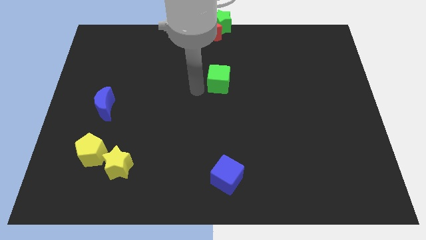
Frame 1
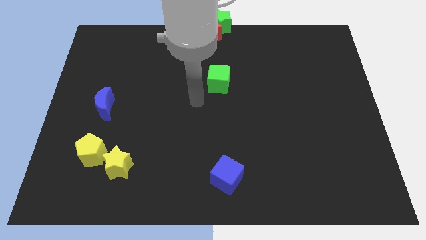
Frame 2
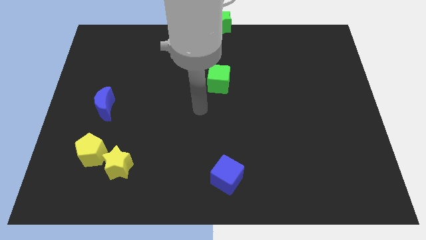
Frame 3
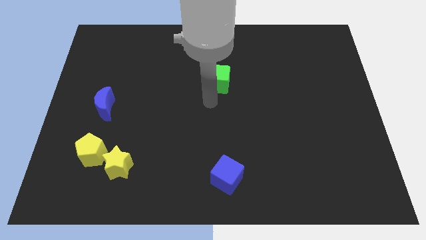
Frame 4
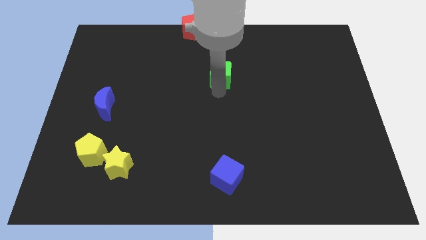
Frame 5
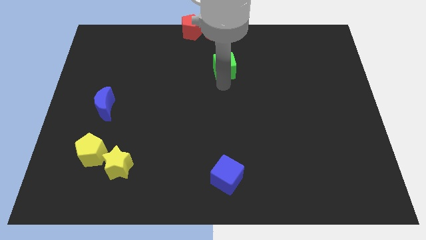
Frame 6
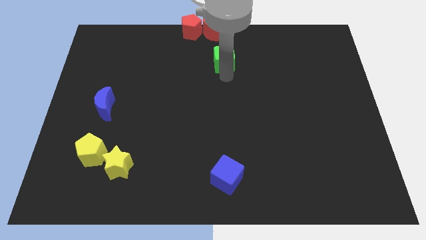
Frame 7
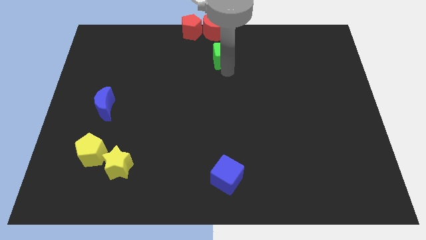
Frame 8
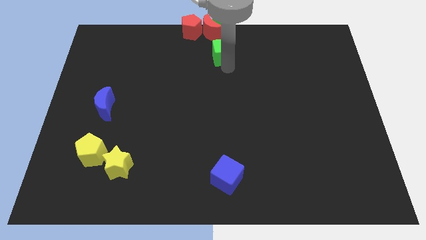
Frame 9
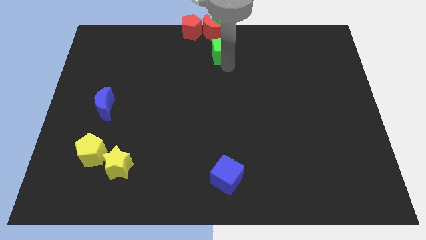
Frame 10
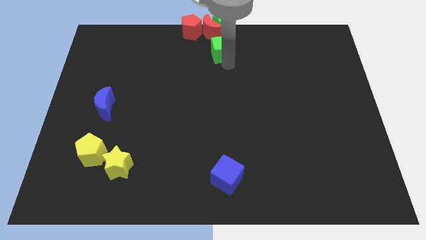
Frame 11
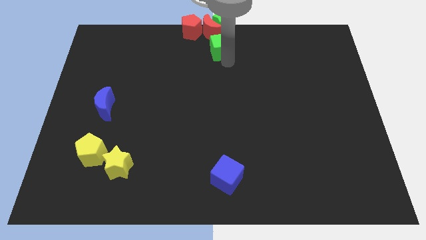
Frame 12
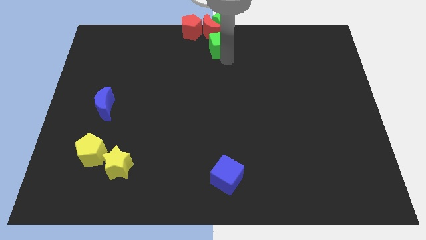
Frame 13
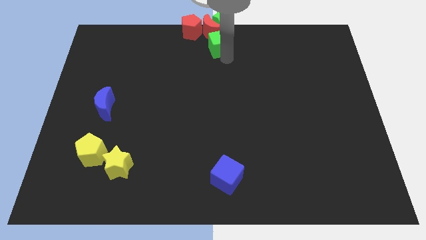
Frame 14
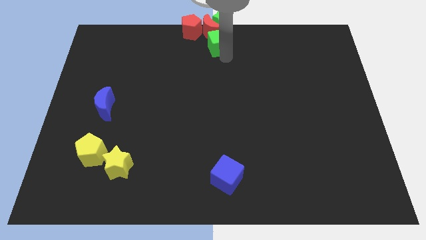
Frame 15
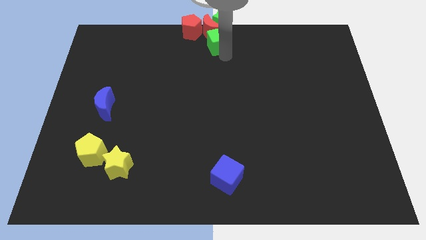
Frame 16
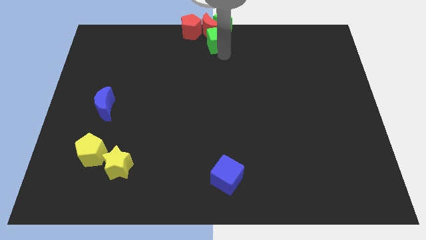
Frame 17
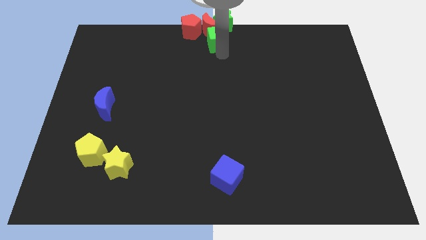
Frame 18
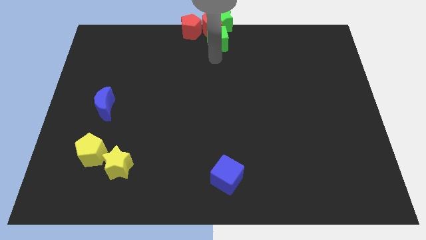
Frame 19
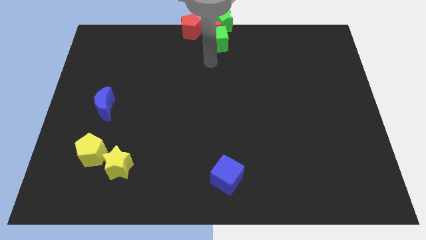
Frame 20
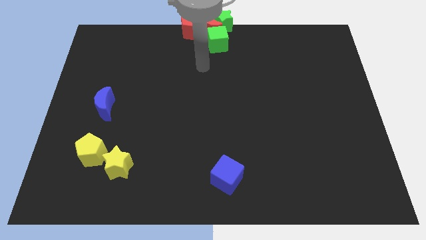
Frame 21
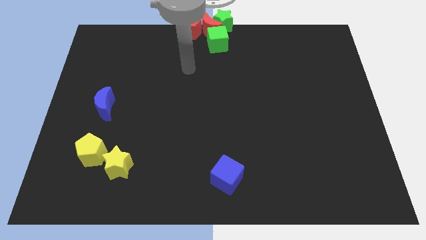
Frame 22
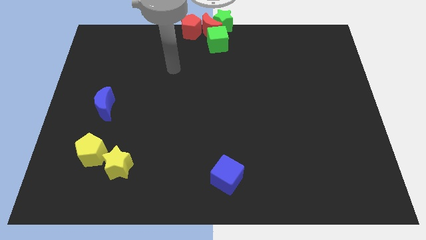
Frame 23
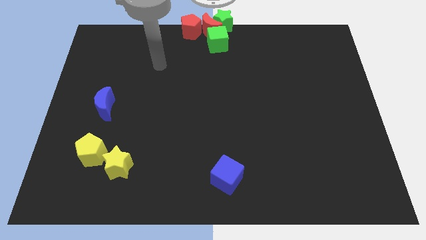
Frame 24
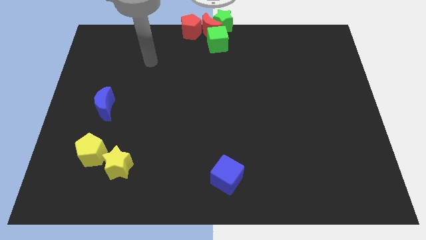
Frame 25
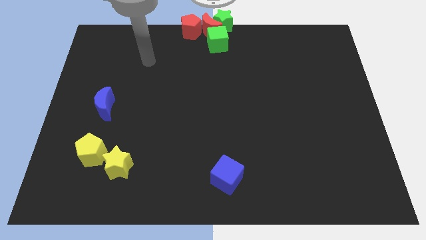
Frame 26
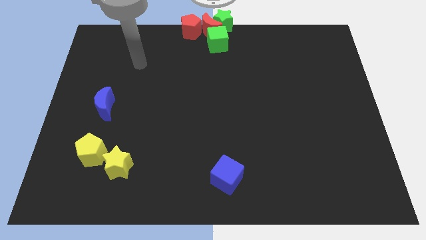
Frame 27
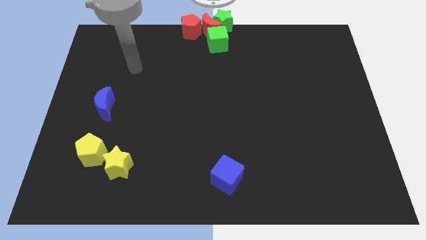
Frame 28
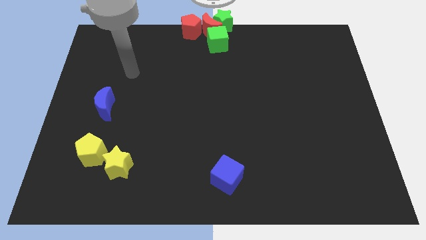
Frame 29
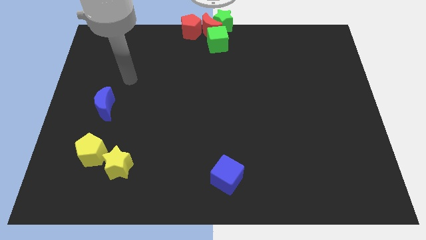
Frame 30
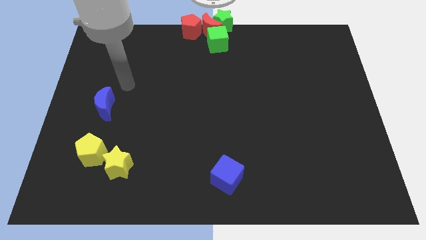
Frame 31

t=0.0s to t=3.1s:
push the green cube below to the red moon

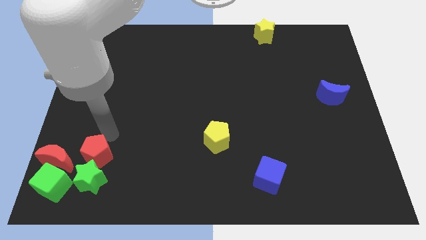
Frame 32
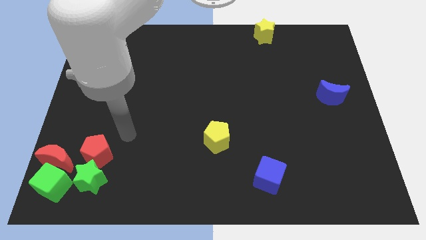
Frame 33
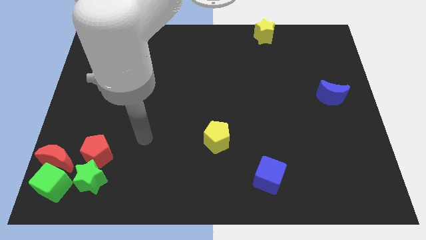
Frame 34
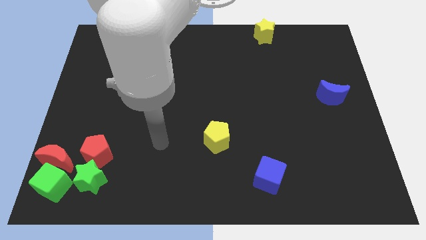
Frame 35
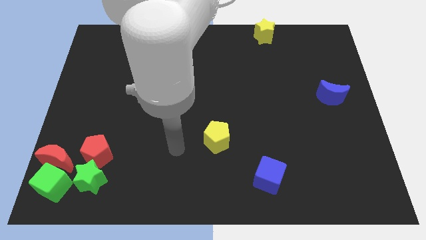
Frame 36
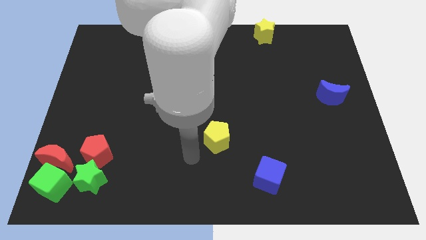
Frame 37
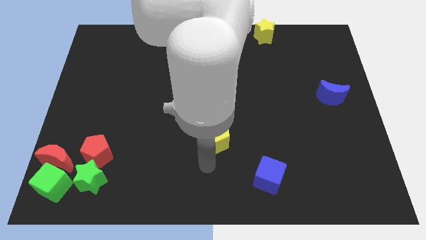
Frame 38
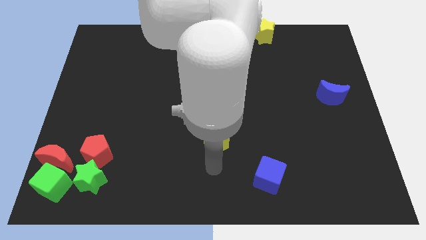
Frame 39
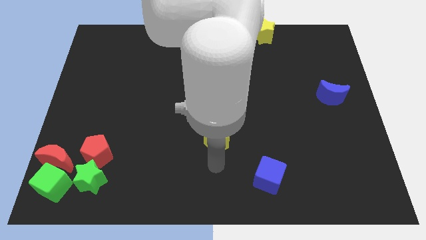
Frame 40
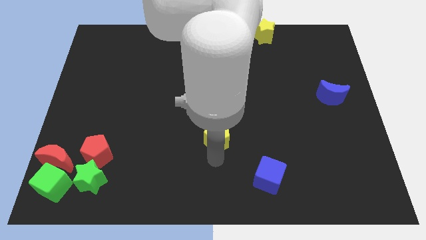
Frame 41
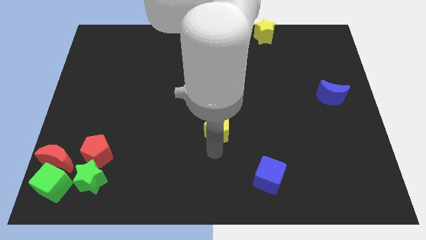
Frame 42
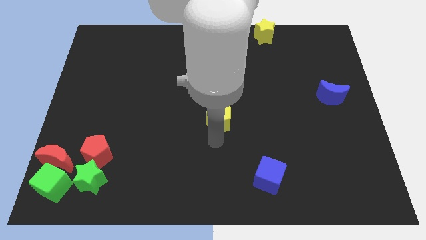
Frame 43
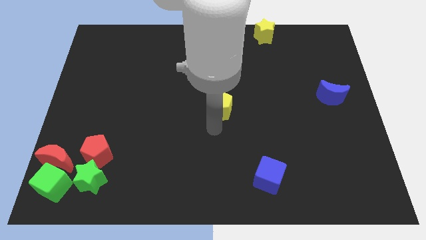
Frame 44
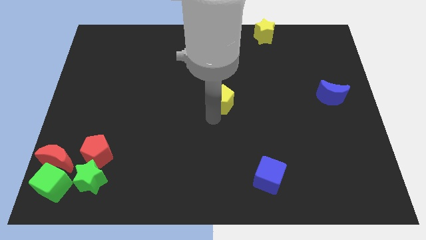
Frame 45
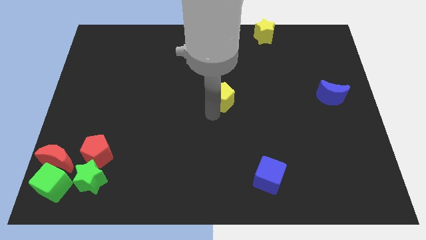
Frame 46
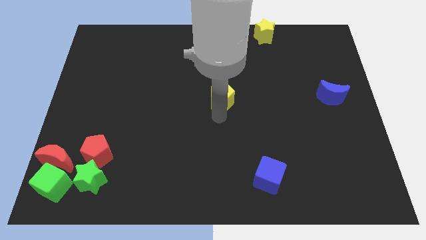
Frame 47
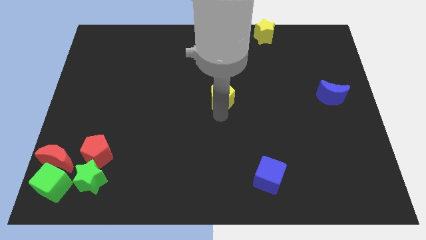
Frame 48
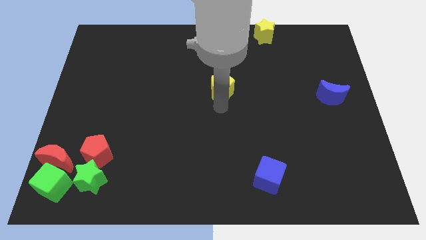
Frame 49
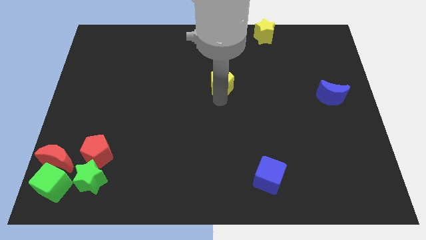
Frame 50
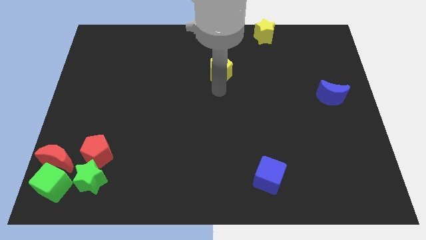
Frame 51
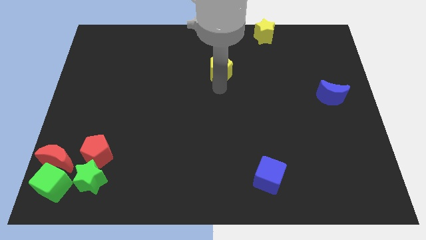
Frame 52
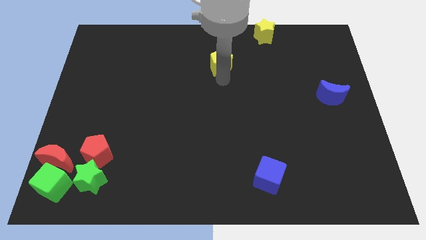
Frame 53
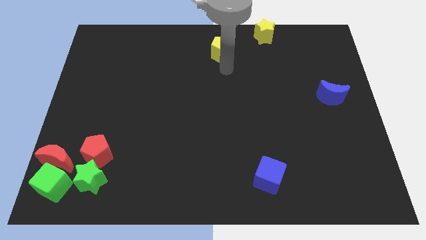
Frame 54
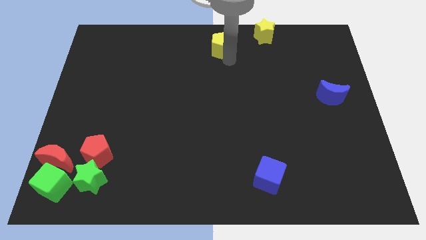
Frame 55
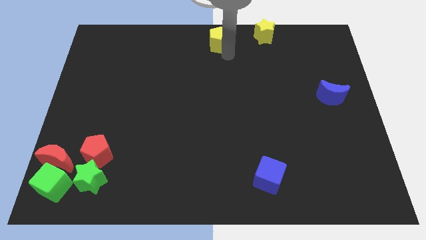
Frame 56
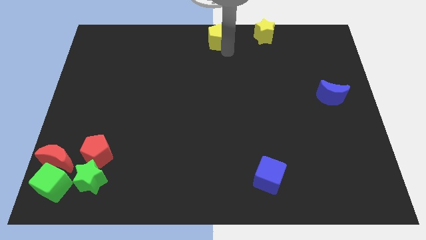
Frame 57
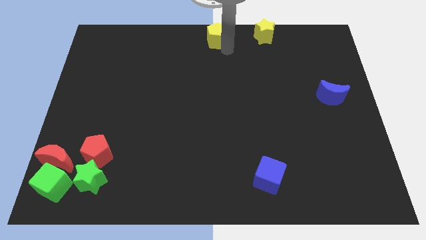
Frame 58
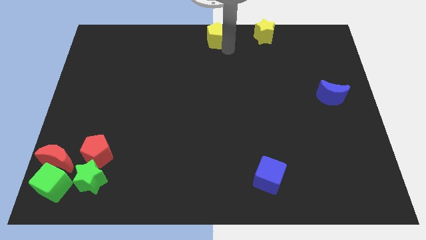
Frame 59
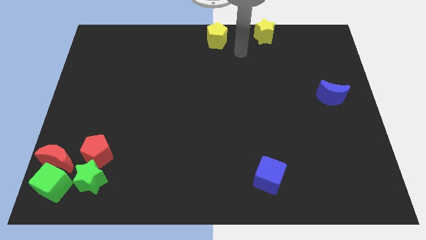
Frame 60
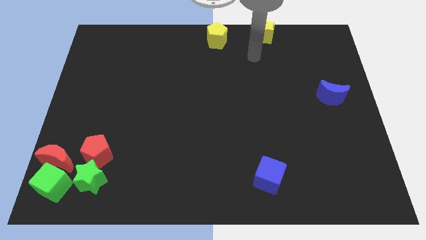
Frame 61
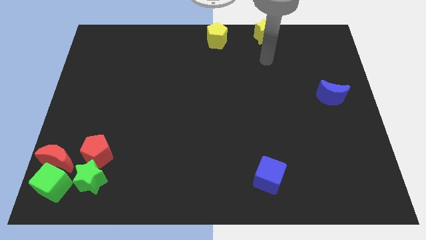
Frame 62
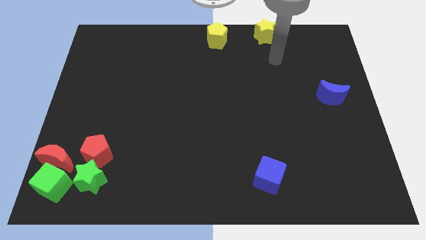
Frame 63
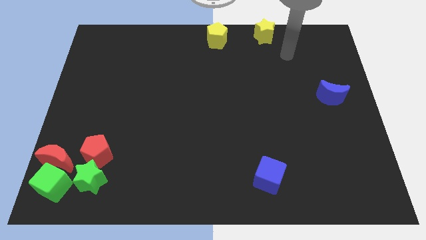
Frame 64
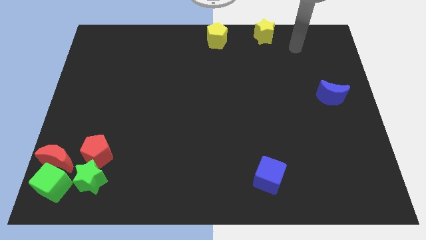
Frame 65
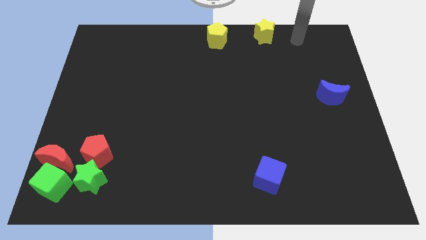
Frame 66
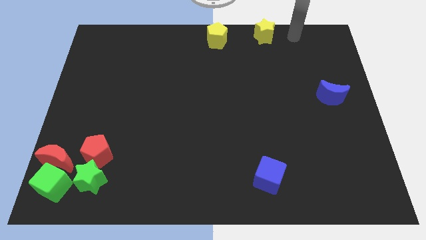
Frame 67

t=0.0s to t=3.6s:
move the yellow pentagon to the center top of the board

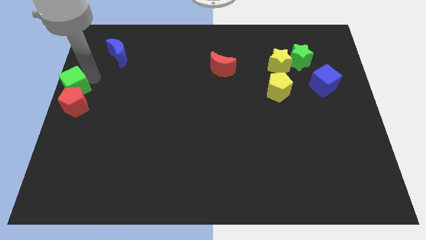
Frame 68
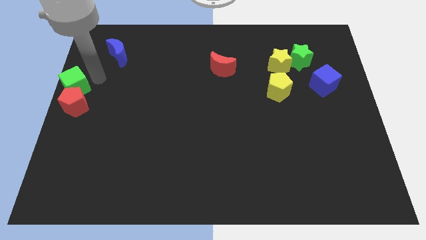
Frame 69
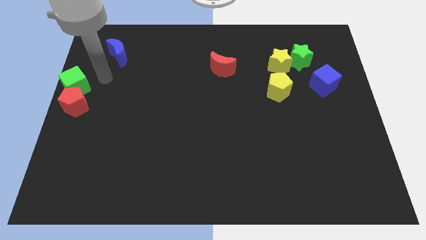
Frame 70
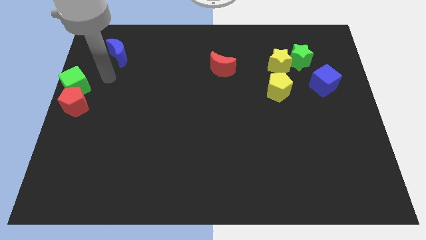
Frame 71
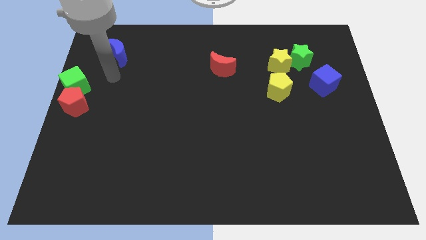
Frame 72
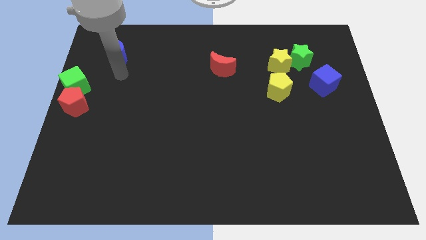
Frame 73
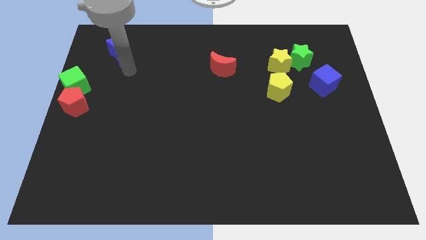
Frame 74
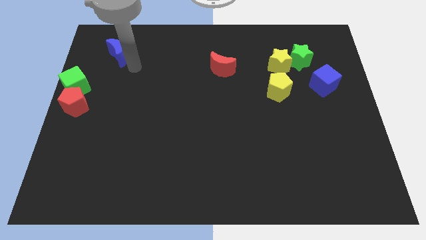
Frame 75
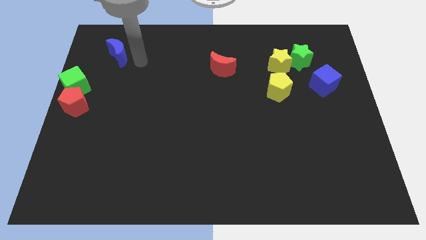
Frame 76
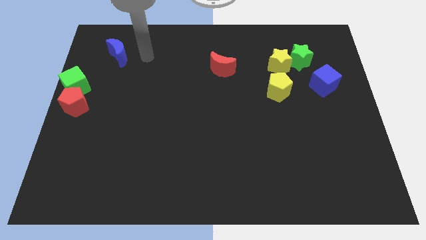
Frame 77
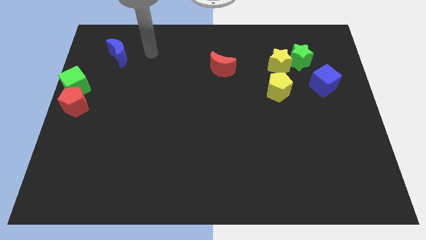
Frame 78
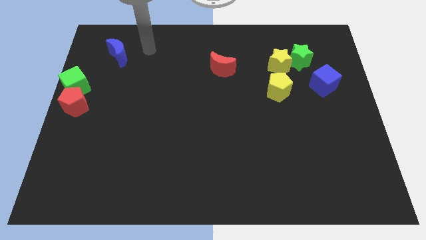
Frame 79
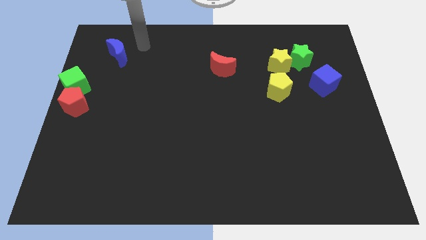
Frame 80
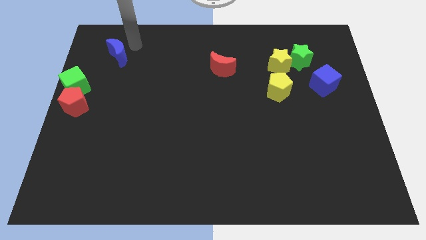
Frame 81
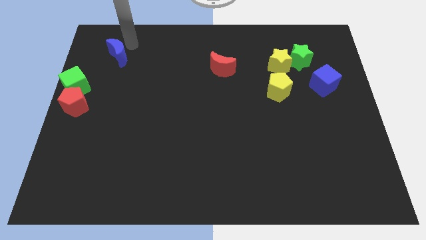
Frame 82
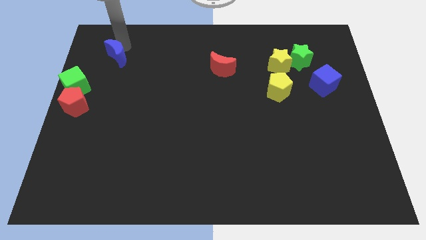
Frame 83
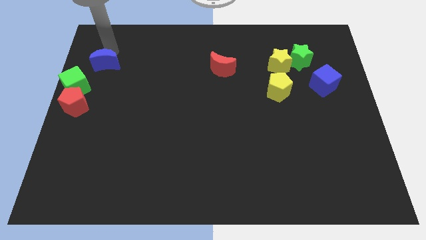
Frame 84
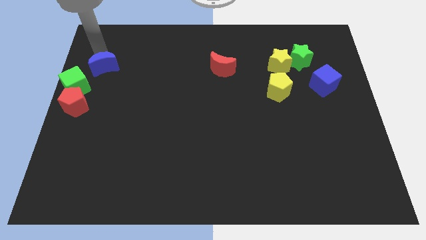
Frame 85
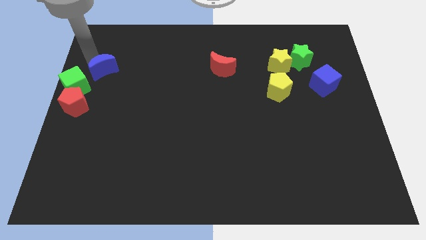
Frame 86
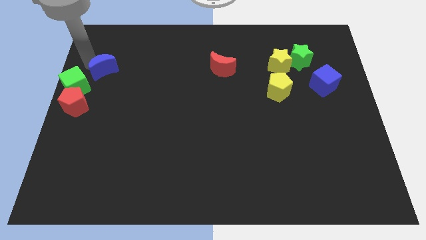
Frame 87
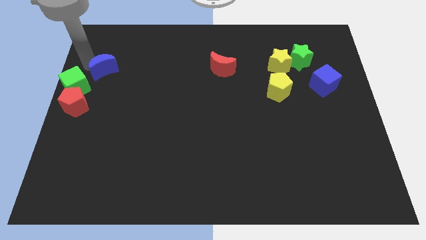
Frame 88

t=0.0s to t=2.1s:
move the blue moon slightly down

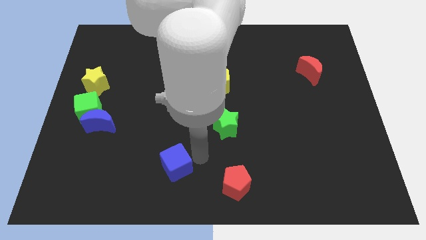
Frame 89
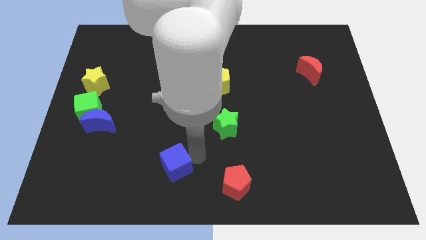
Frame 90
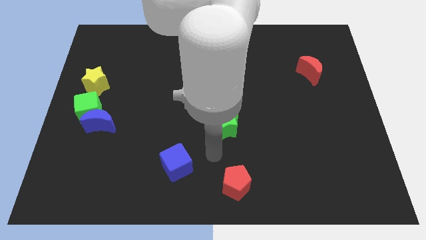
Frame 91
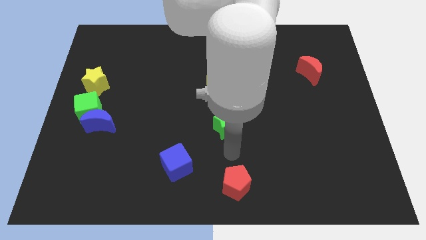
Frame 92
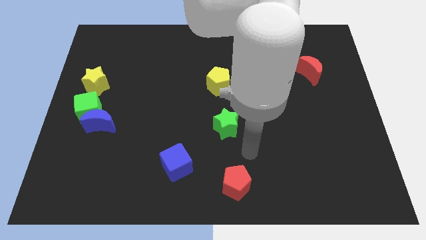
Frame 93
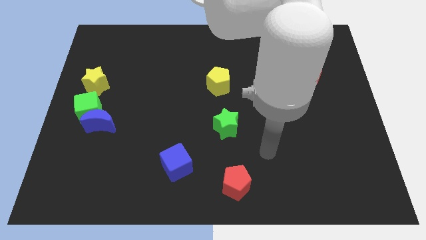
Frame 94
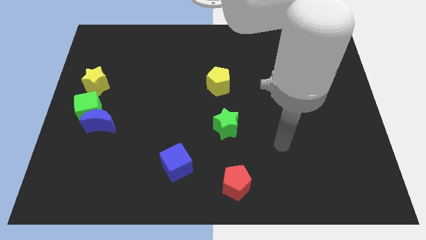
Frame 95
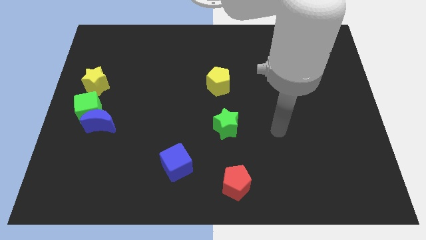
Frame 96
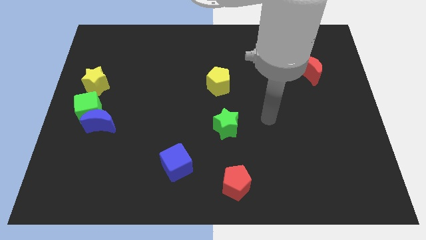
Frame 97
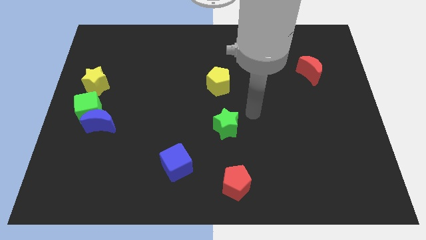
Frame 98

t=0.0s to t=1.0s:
move your arm away from the blue cube
